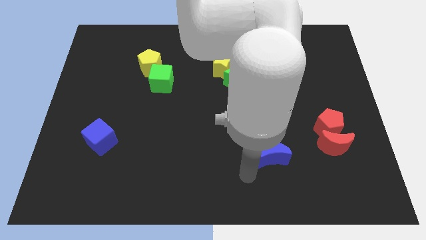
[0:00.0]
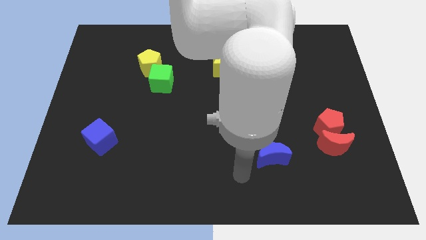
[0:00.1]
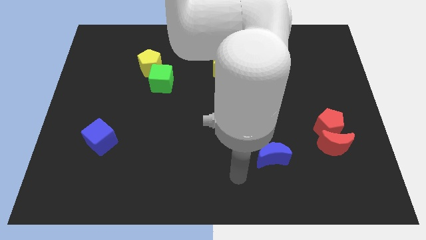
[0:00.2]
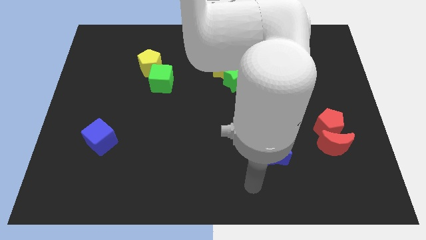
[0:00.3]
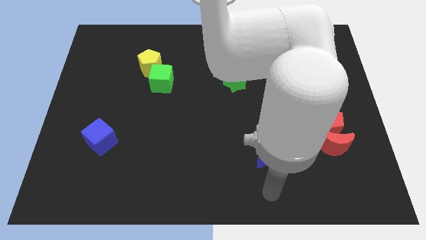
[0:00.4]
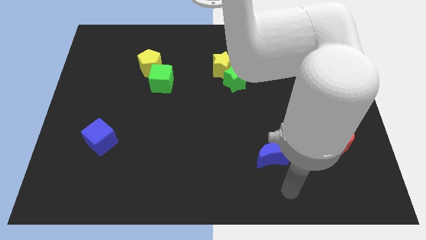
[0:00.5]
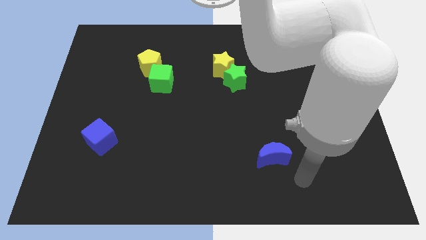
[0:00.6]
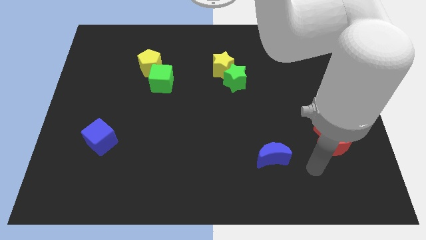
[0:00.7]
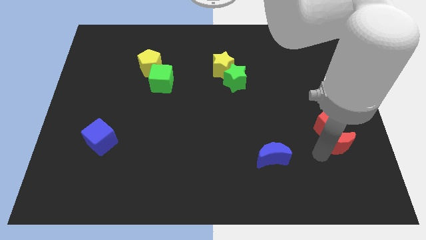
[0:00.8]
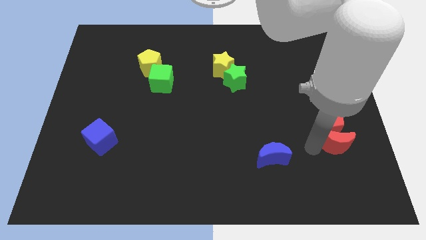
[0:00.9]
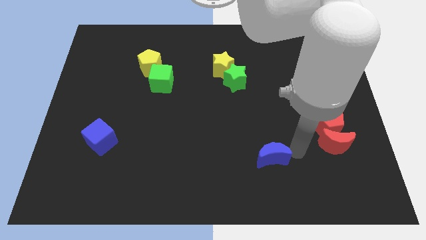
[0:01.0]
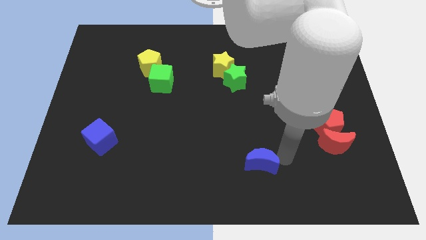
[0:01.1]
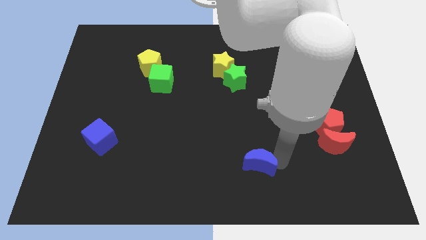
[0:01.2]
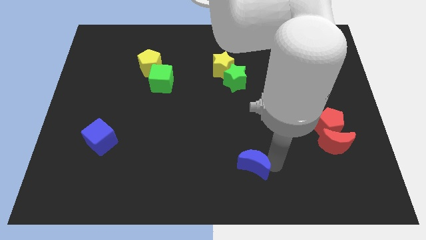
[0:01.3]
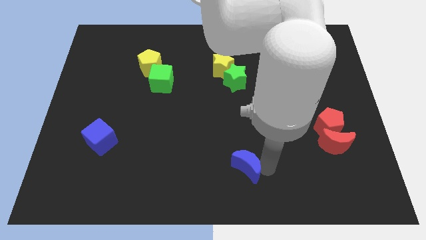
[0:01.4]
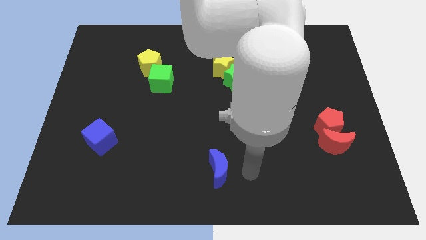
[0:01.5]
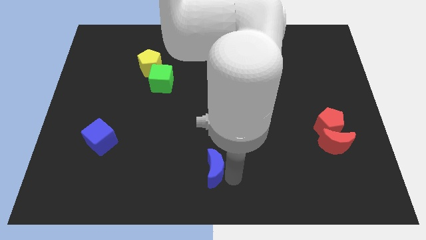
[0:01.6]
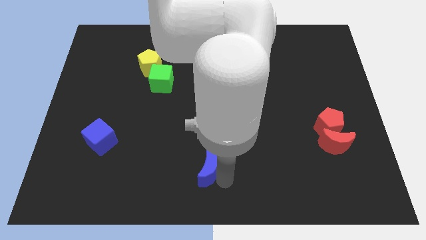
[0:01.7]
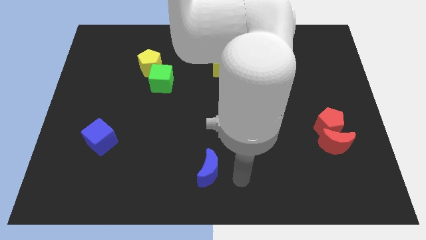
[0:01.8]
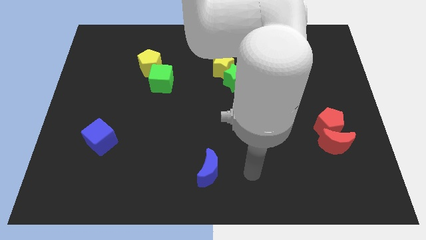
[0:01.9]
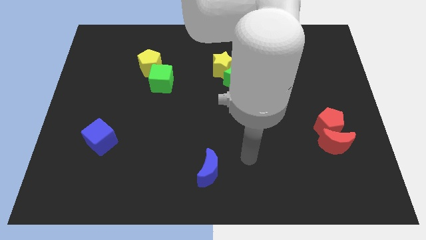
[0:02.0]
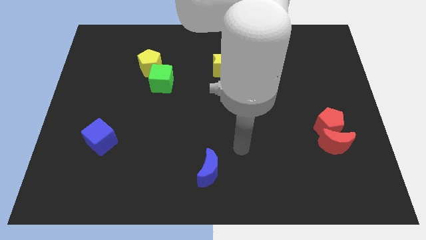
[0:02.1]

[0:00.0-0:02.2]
drag the blue crescent towards the bottom center

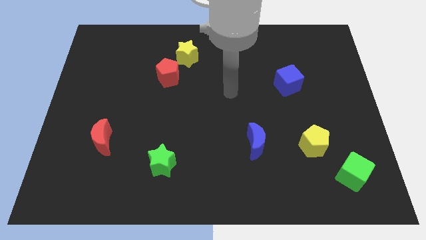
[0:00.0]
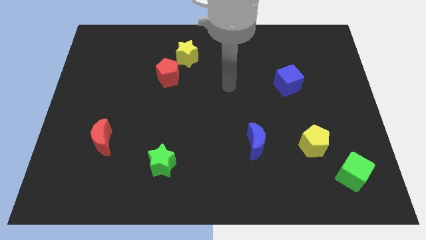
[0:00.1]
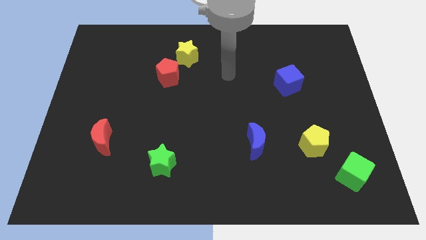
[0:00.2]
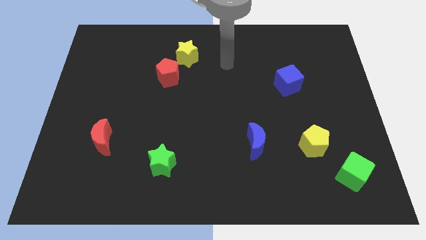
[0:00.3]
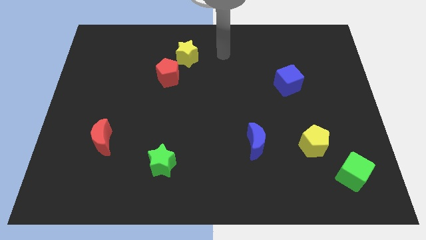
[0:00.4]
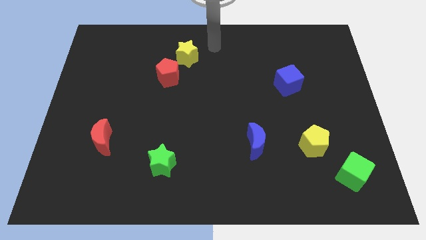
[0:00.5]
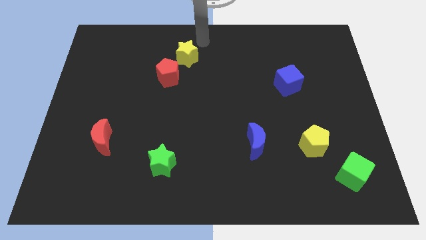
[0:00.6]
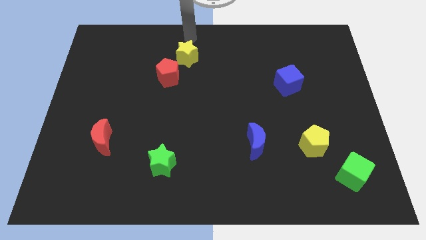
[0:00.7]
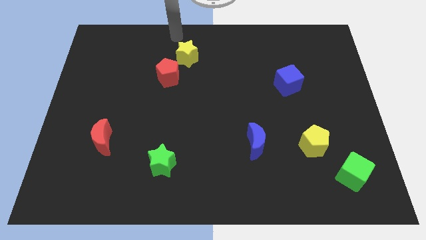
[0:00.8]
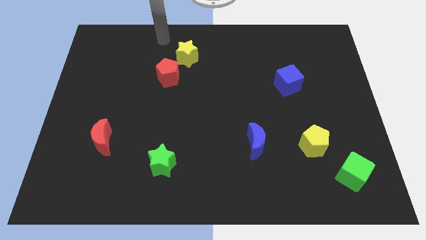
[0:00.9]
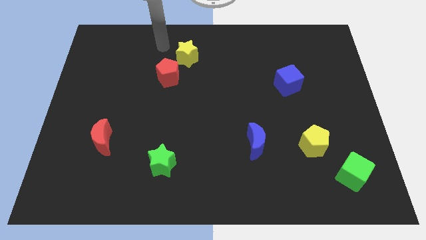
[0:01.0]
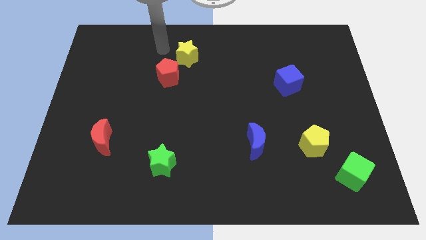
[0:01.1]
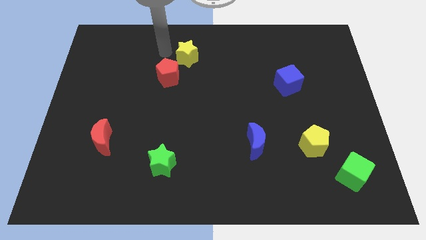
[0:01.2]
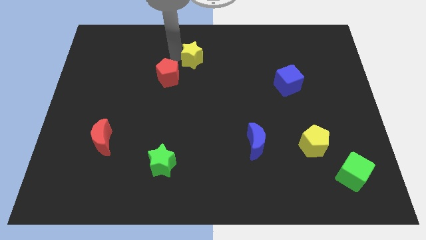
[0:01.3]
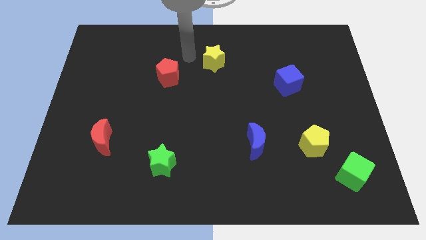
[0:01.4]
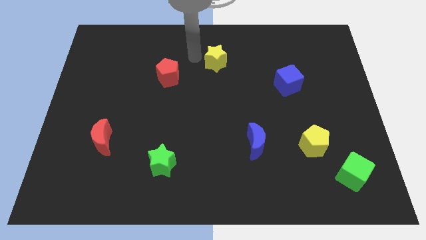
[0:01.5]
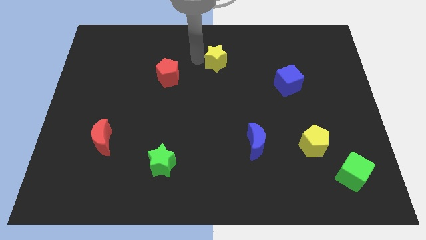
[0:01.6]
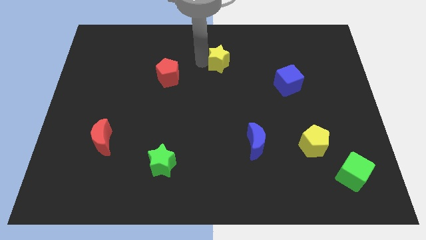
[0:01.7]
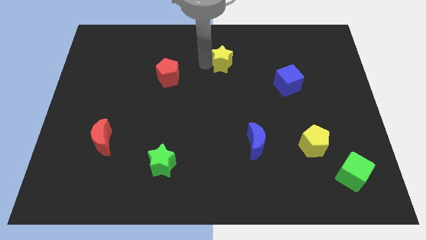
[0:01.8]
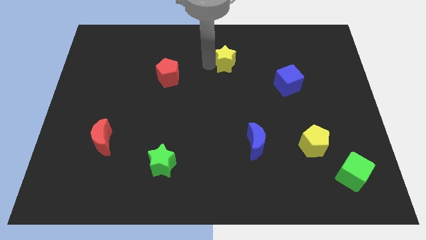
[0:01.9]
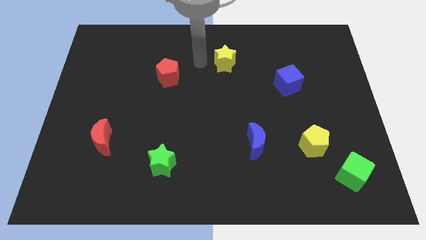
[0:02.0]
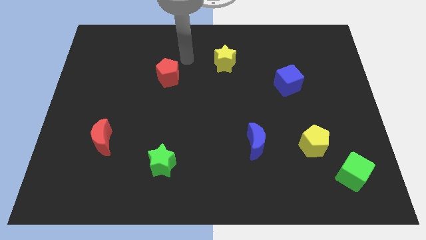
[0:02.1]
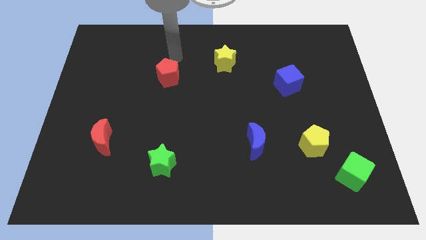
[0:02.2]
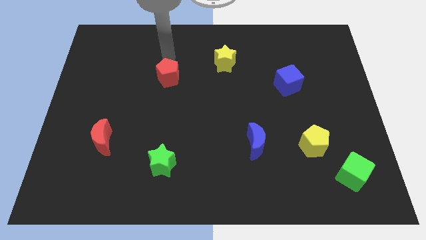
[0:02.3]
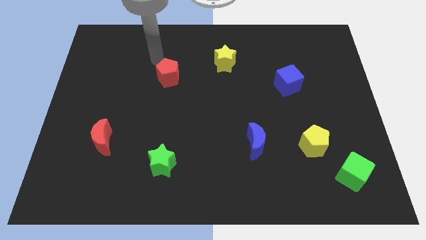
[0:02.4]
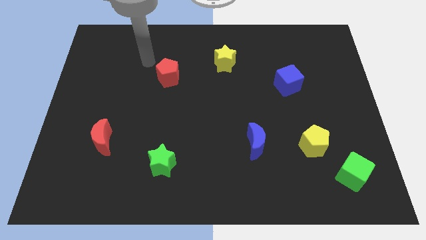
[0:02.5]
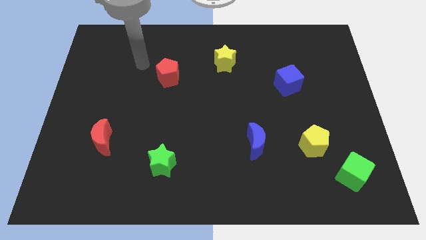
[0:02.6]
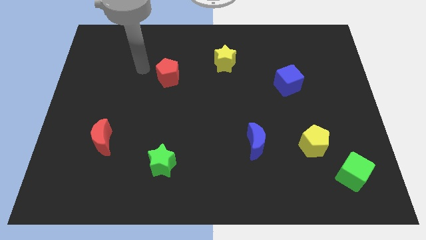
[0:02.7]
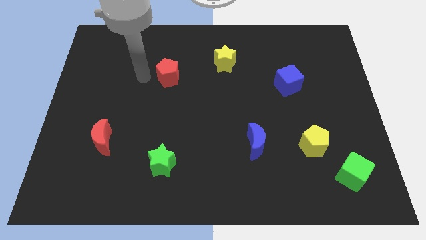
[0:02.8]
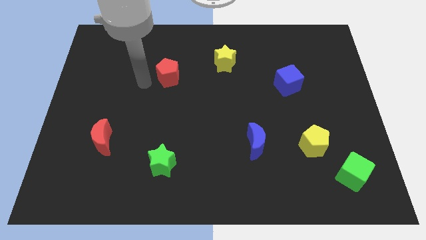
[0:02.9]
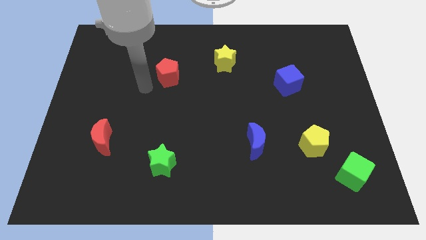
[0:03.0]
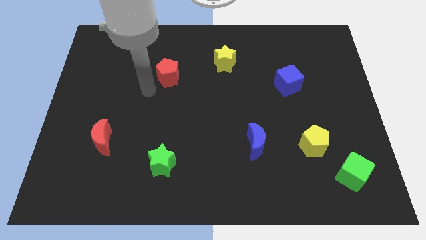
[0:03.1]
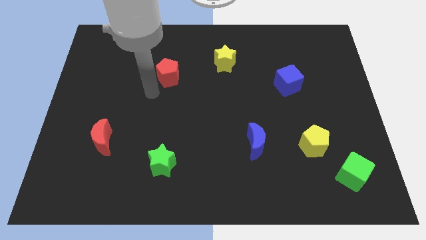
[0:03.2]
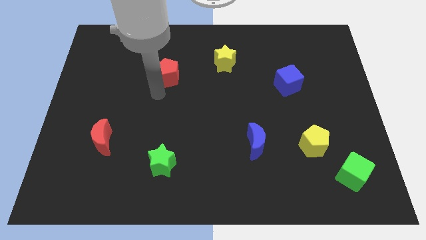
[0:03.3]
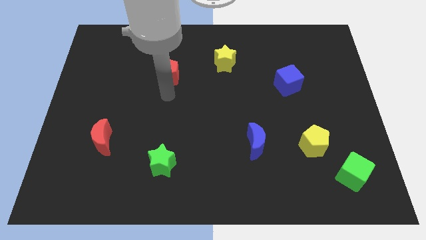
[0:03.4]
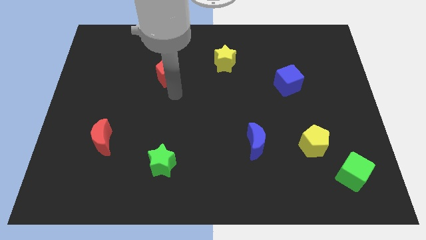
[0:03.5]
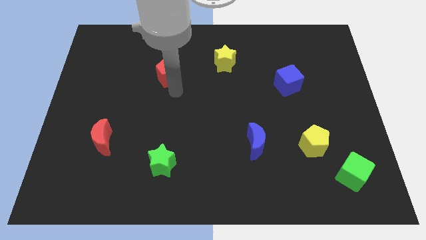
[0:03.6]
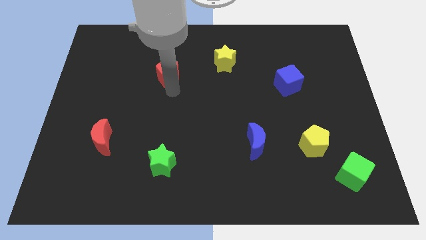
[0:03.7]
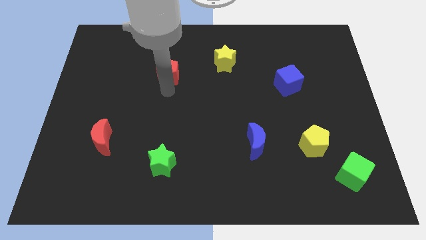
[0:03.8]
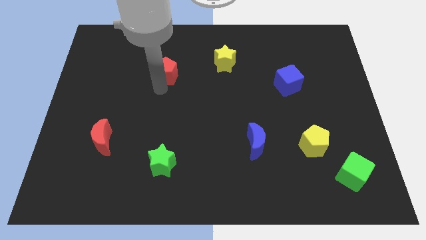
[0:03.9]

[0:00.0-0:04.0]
move yellow star from red pentagon

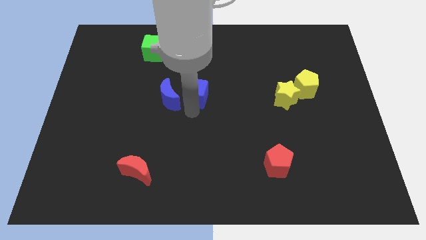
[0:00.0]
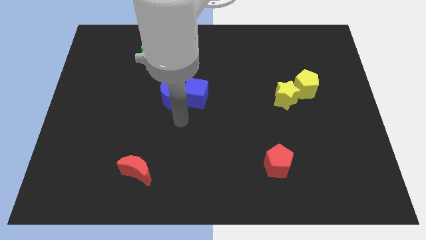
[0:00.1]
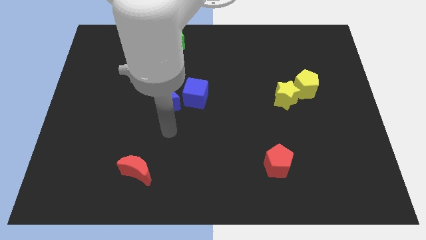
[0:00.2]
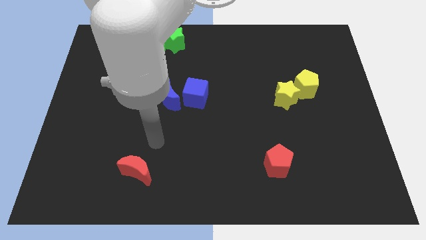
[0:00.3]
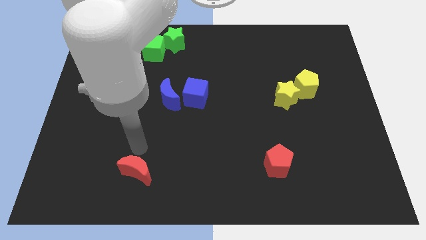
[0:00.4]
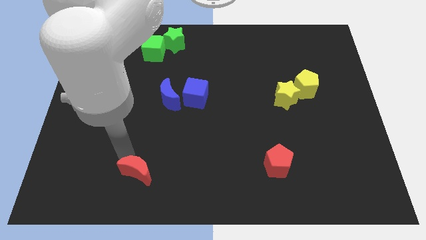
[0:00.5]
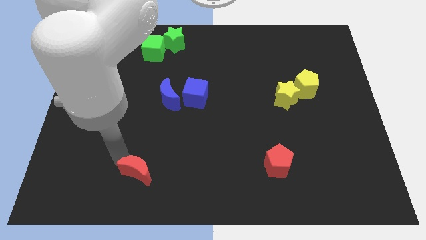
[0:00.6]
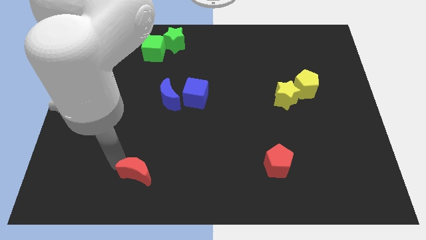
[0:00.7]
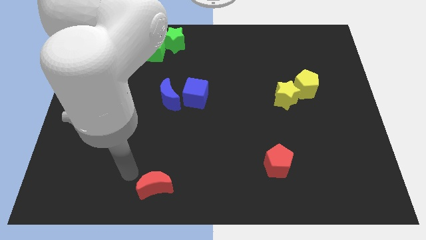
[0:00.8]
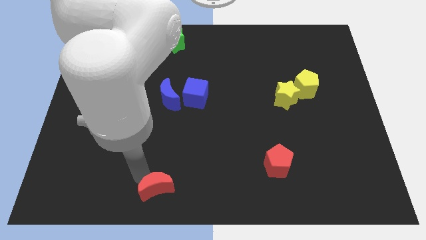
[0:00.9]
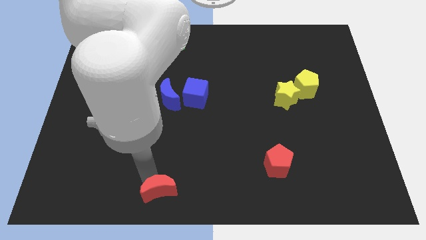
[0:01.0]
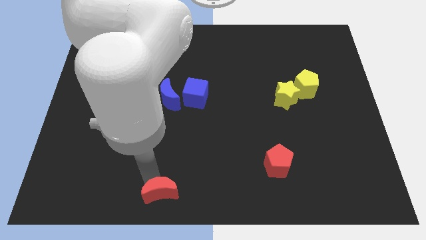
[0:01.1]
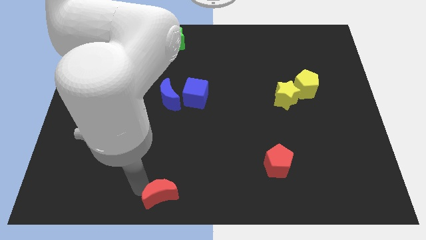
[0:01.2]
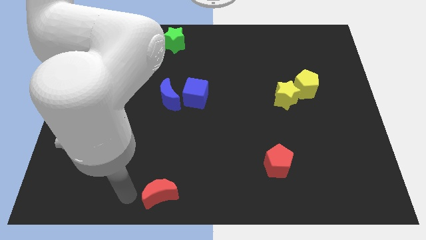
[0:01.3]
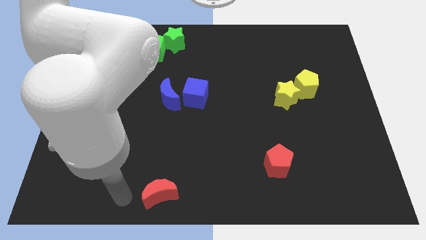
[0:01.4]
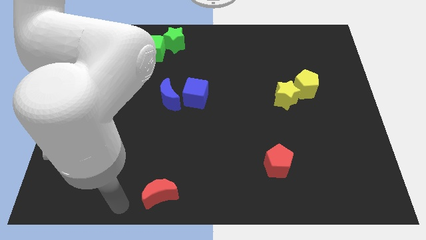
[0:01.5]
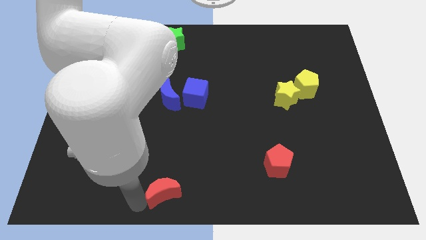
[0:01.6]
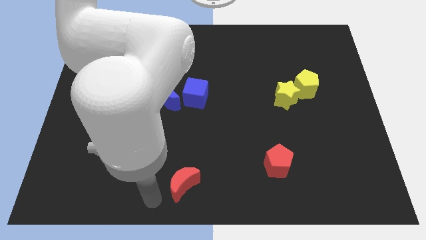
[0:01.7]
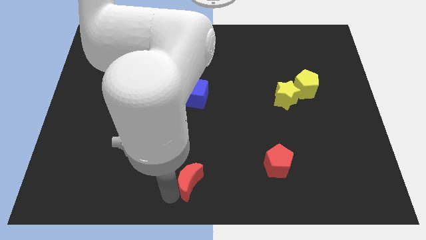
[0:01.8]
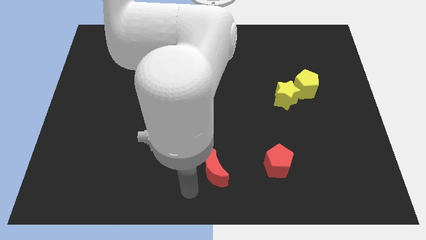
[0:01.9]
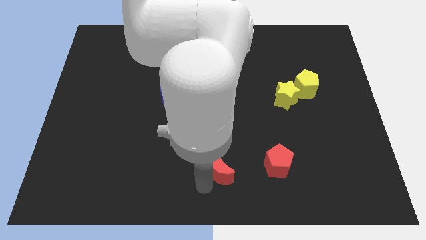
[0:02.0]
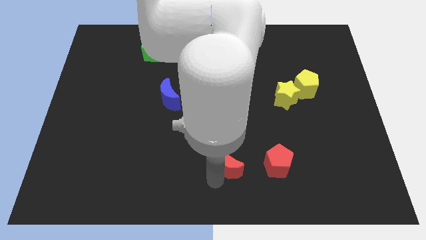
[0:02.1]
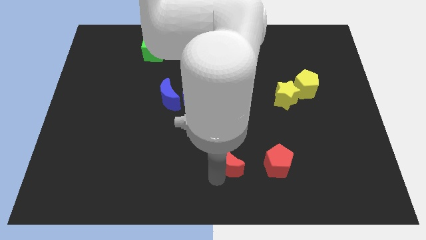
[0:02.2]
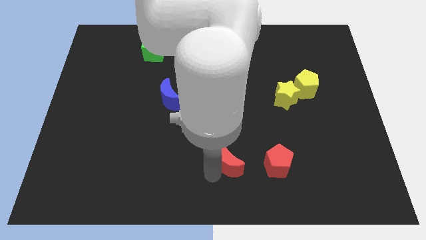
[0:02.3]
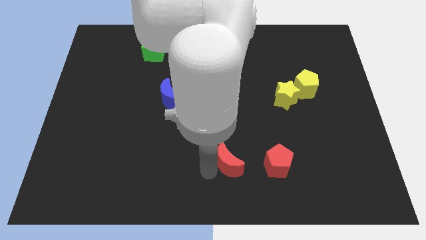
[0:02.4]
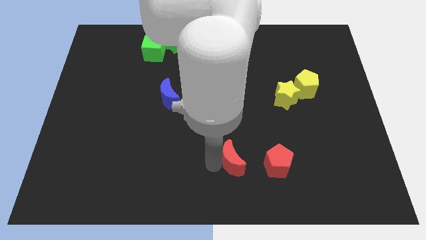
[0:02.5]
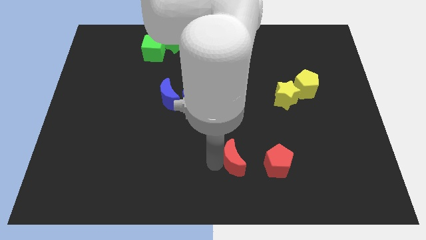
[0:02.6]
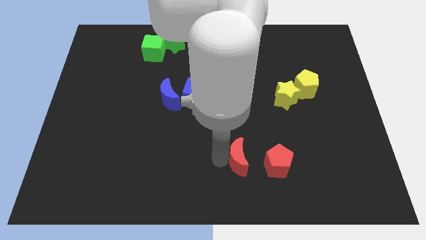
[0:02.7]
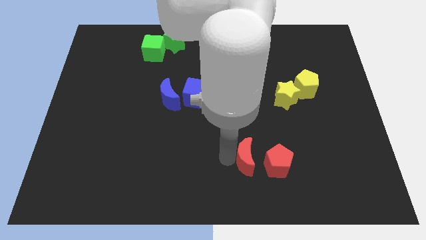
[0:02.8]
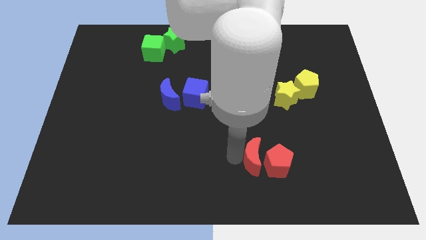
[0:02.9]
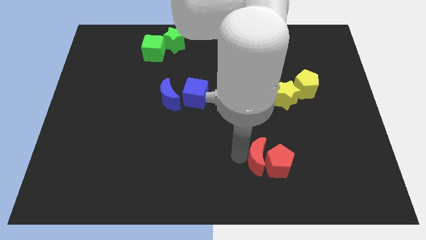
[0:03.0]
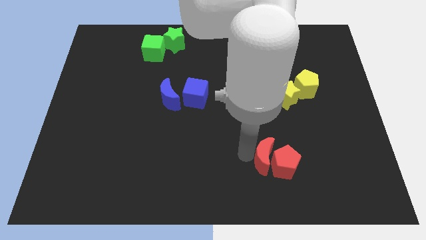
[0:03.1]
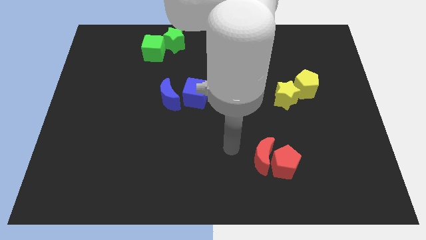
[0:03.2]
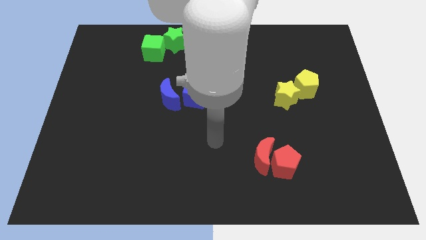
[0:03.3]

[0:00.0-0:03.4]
push the red crescent into the red pentagon
